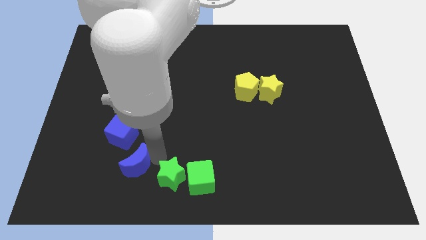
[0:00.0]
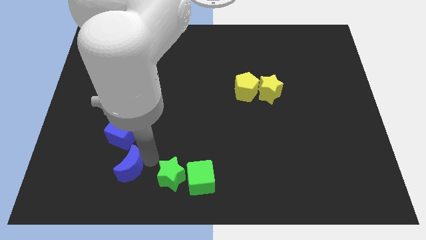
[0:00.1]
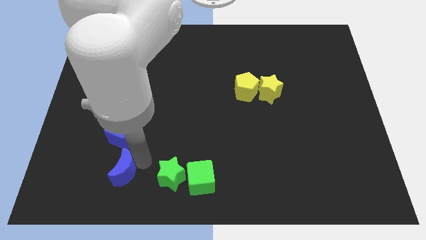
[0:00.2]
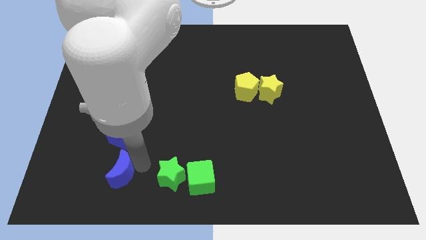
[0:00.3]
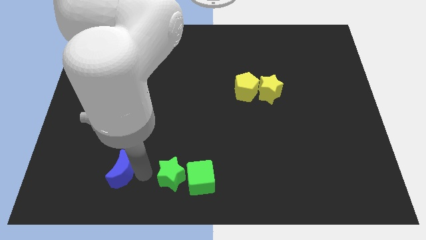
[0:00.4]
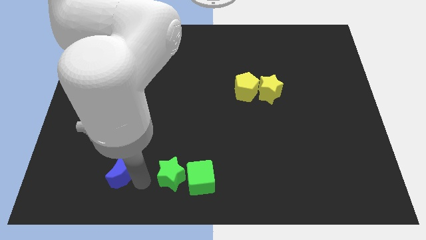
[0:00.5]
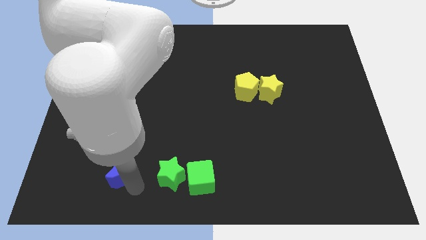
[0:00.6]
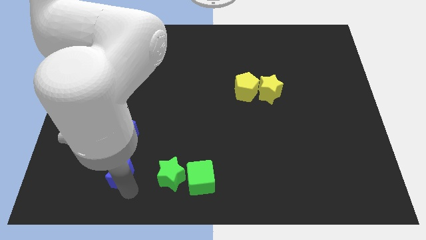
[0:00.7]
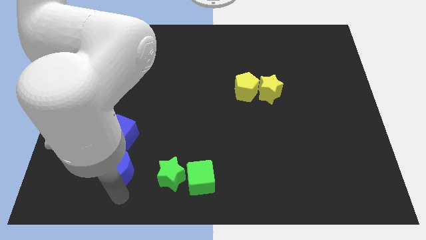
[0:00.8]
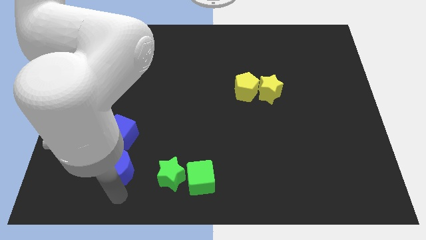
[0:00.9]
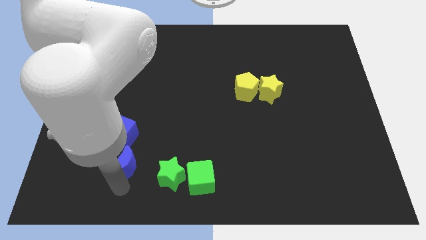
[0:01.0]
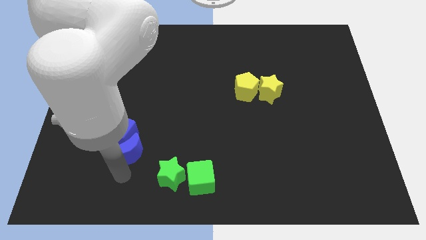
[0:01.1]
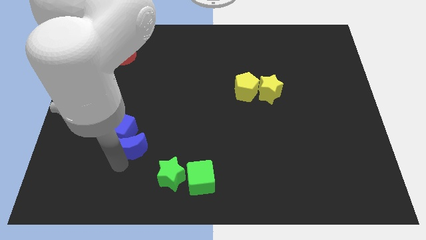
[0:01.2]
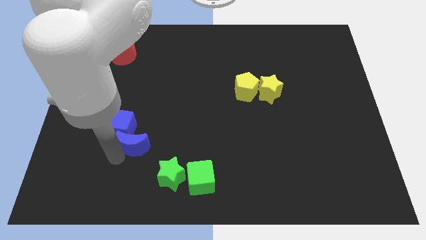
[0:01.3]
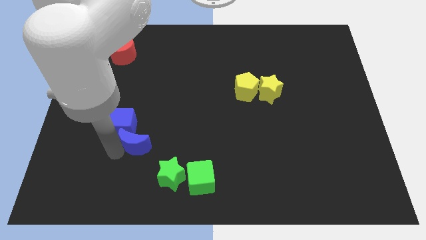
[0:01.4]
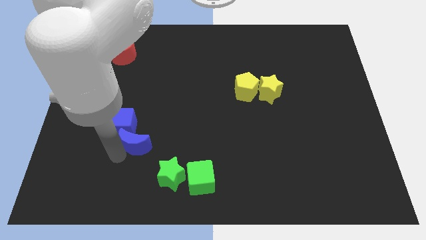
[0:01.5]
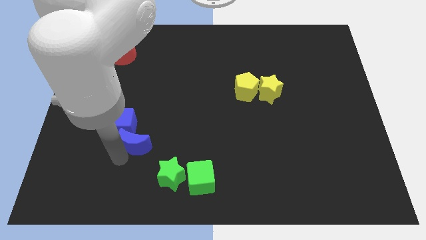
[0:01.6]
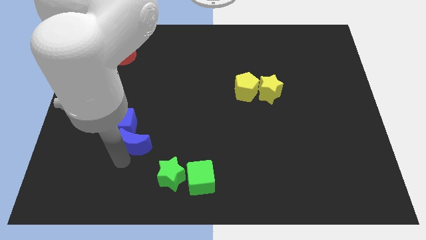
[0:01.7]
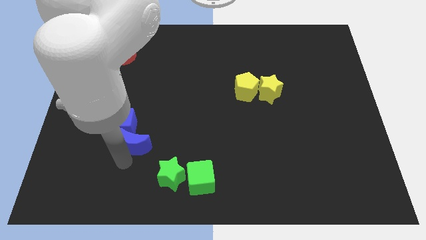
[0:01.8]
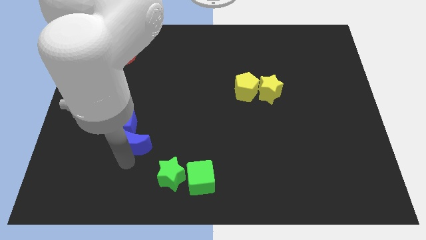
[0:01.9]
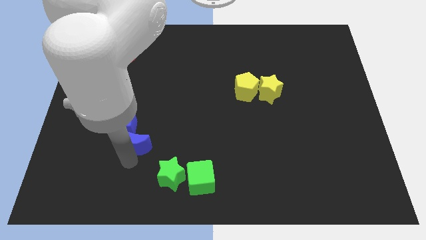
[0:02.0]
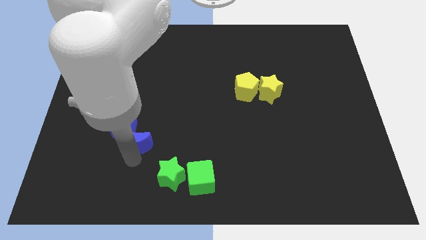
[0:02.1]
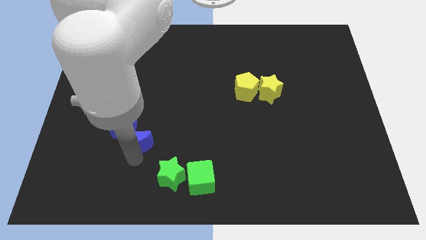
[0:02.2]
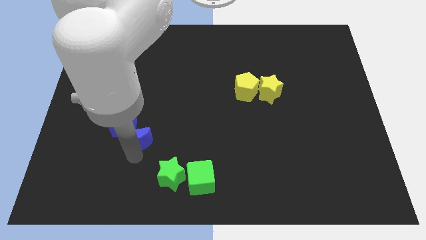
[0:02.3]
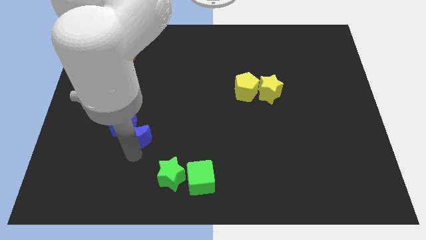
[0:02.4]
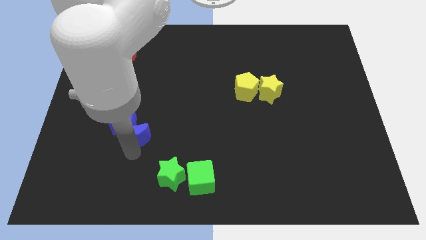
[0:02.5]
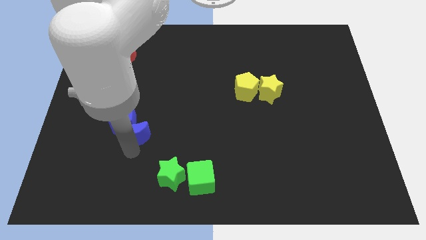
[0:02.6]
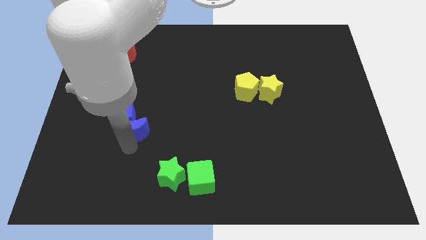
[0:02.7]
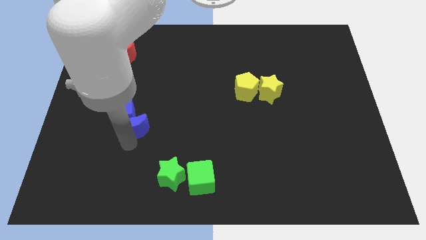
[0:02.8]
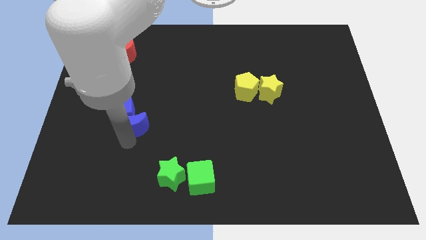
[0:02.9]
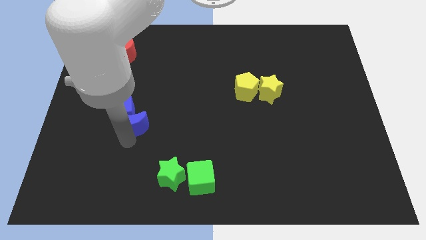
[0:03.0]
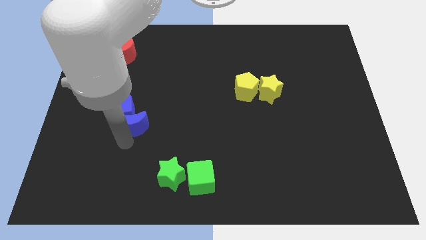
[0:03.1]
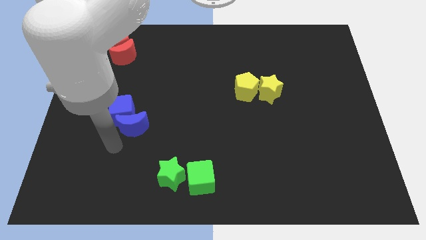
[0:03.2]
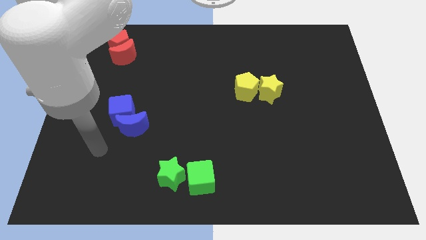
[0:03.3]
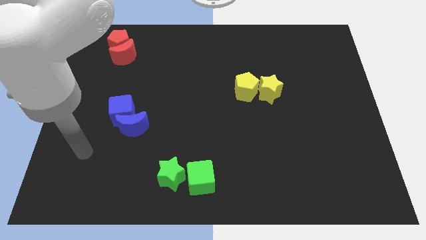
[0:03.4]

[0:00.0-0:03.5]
move both the blue blocks slightly to the top side of the board

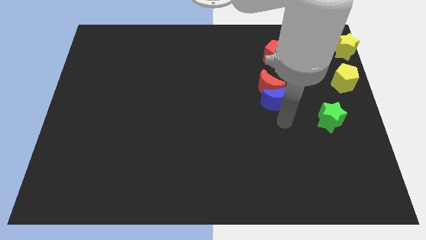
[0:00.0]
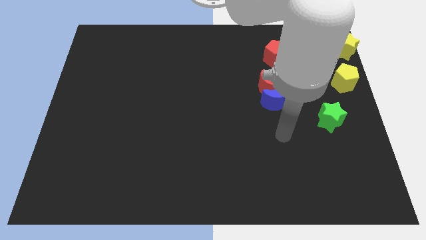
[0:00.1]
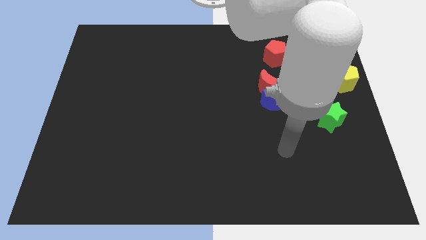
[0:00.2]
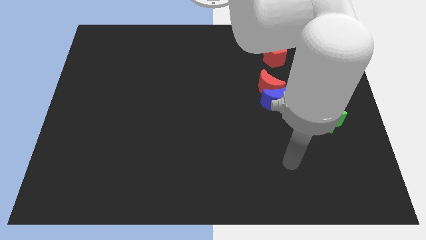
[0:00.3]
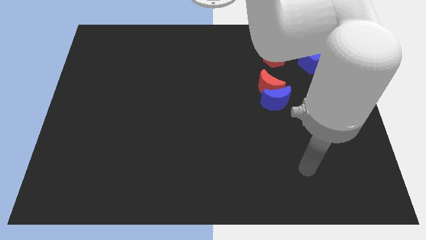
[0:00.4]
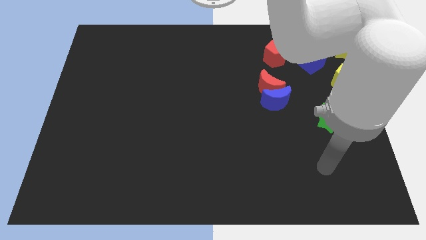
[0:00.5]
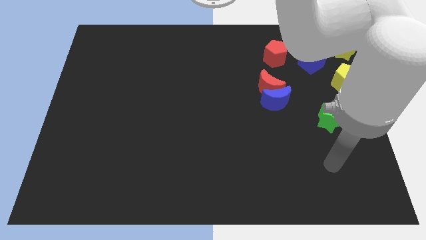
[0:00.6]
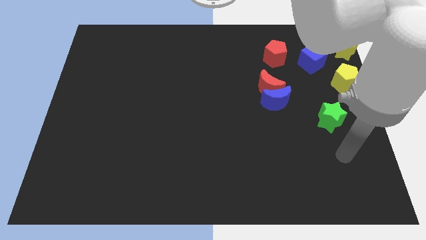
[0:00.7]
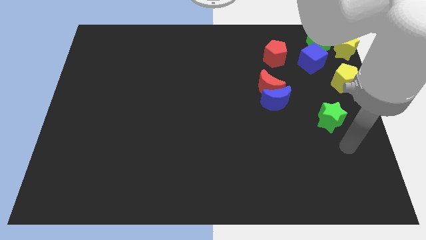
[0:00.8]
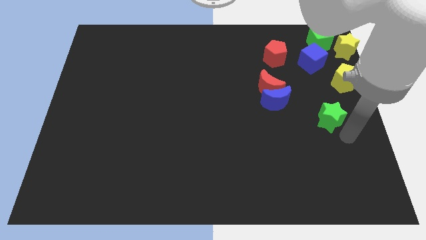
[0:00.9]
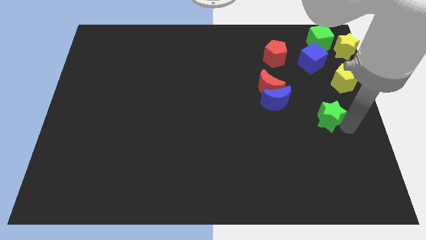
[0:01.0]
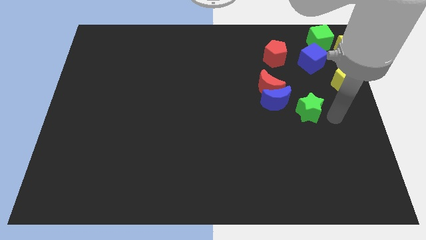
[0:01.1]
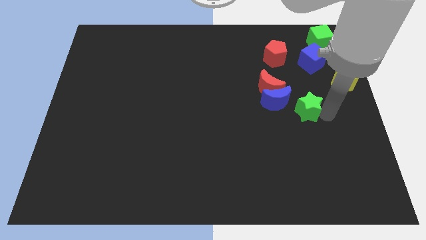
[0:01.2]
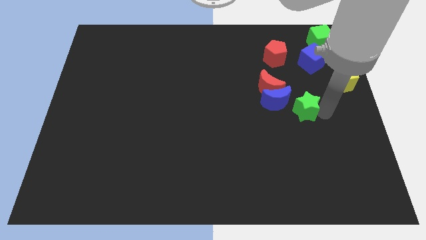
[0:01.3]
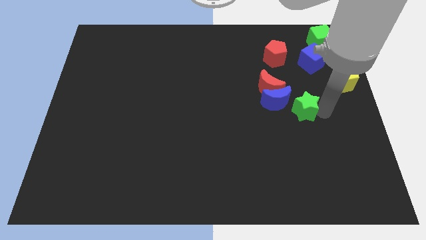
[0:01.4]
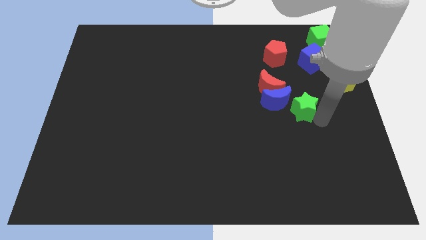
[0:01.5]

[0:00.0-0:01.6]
push the green star close to the blue moon

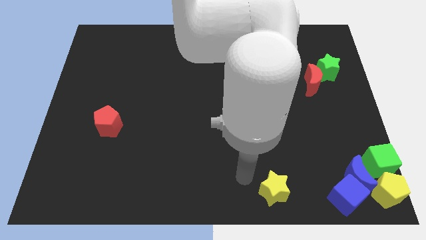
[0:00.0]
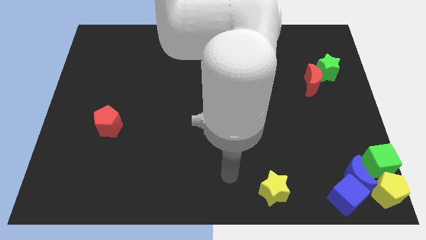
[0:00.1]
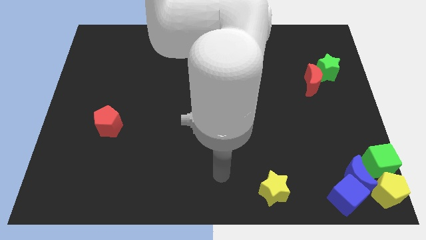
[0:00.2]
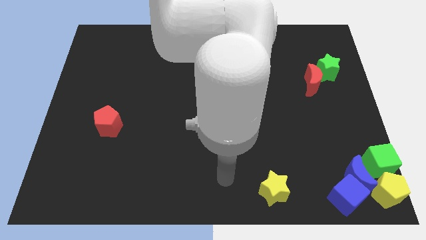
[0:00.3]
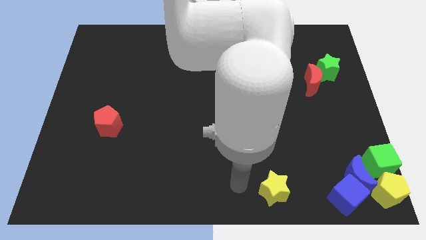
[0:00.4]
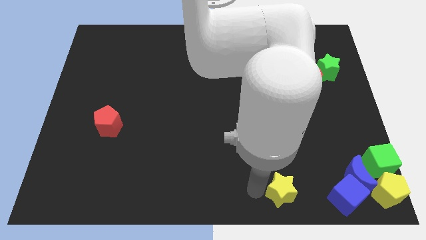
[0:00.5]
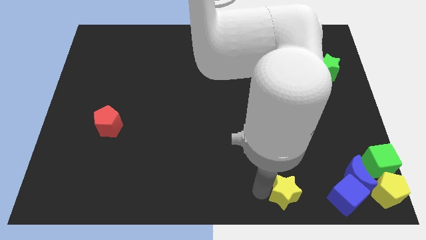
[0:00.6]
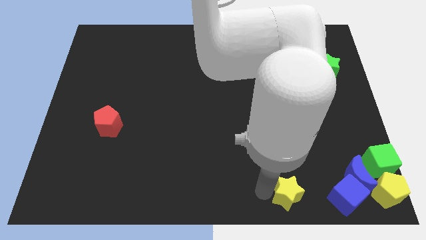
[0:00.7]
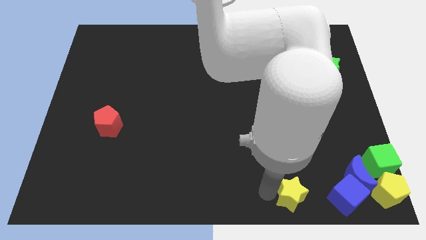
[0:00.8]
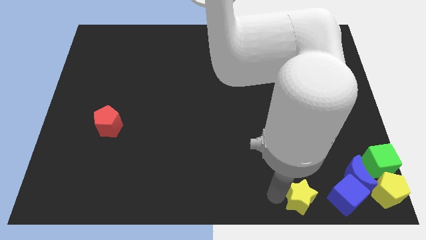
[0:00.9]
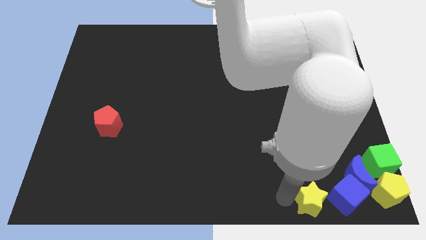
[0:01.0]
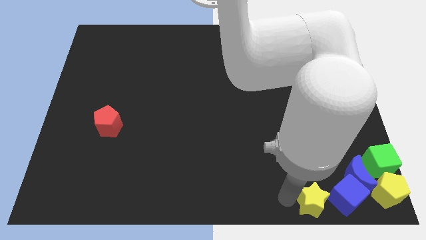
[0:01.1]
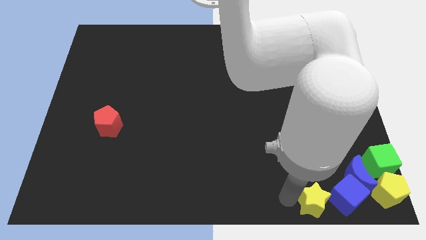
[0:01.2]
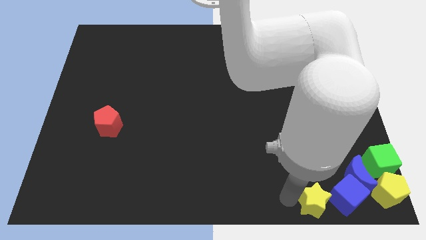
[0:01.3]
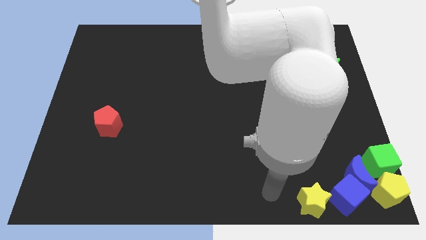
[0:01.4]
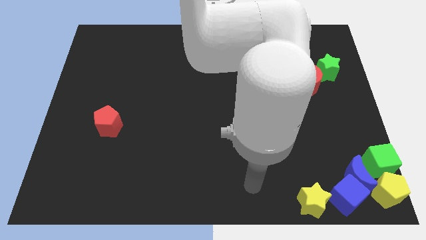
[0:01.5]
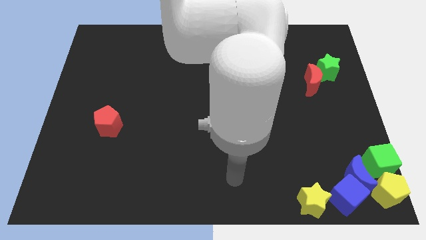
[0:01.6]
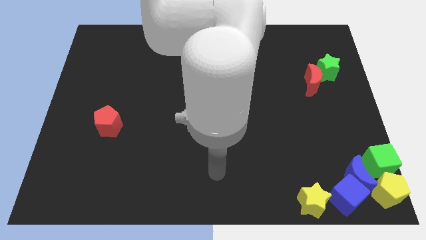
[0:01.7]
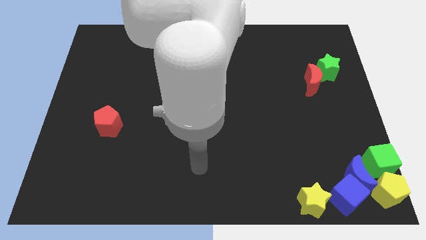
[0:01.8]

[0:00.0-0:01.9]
drag the yellow star beside the blue cube

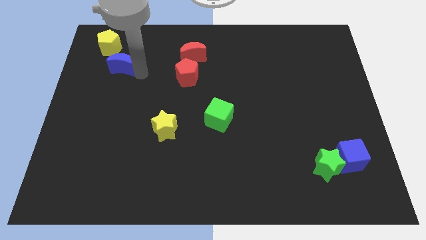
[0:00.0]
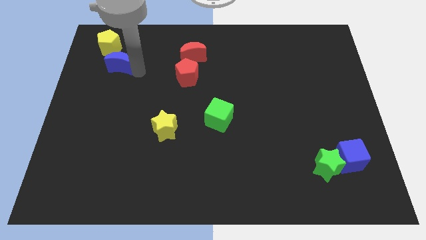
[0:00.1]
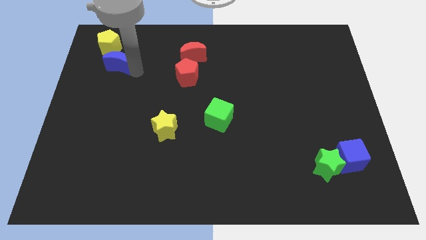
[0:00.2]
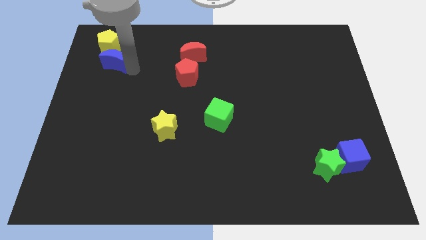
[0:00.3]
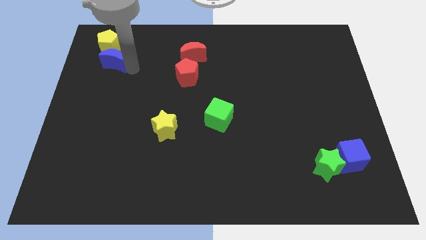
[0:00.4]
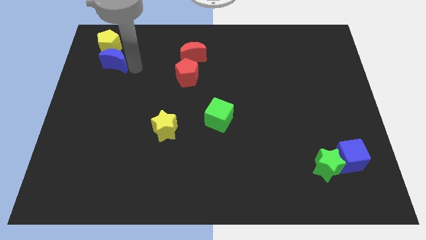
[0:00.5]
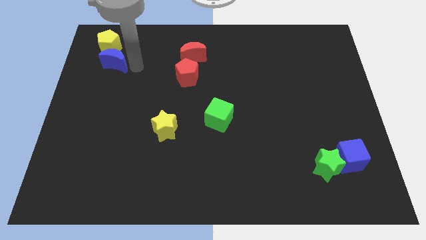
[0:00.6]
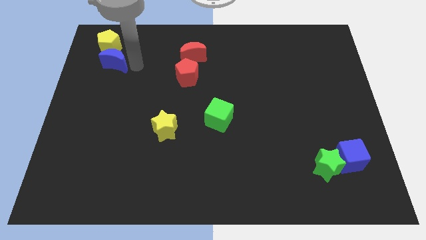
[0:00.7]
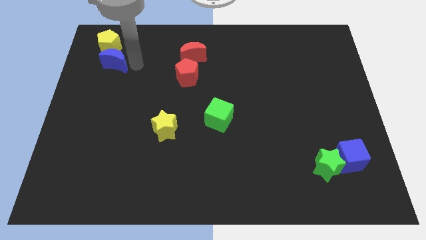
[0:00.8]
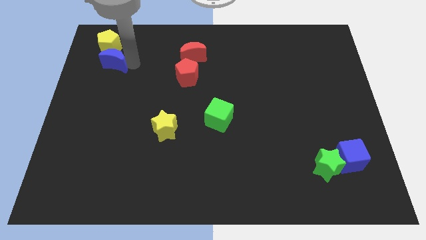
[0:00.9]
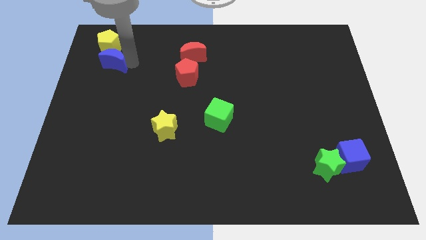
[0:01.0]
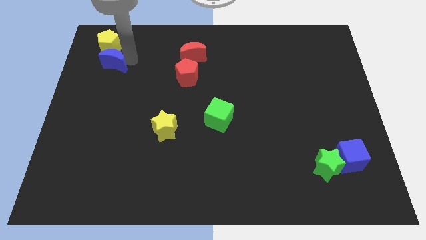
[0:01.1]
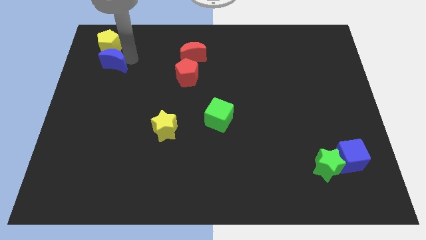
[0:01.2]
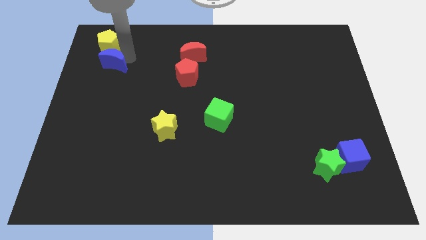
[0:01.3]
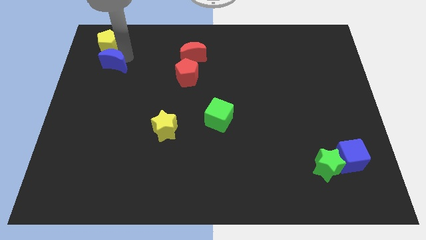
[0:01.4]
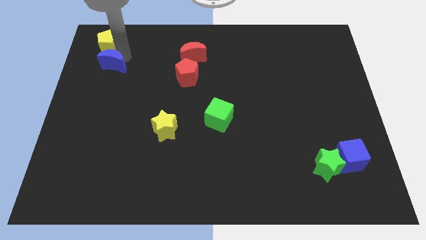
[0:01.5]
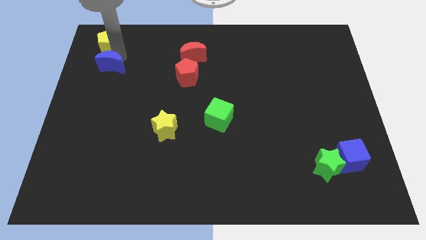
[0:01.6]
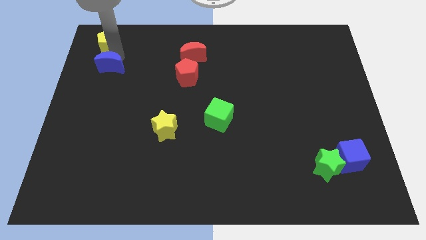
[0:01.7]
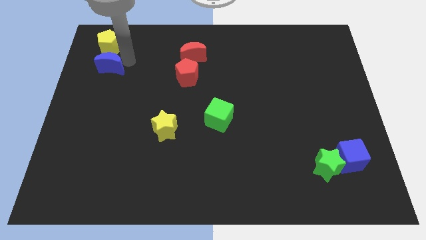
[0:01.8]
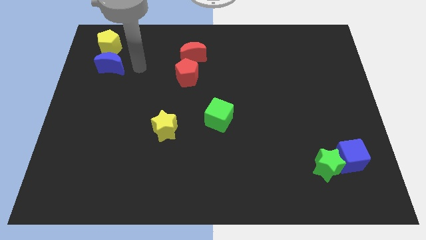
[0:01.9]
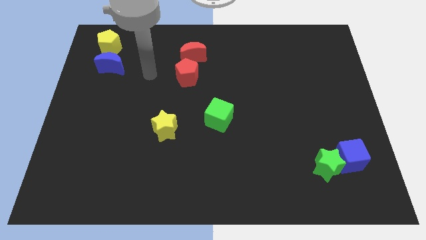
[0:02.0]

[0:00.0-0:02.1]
place the blue moon at the bottom side of the yellow pentagon
